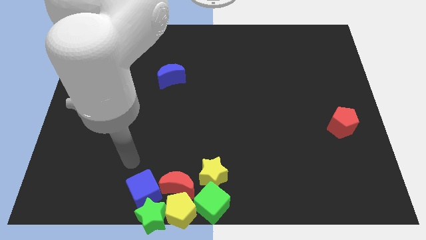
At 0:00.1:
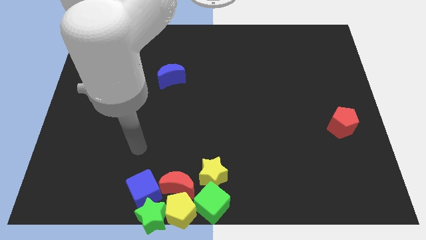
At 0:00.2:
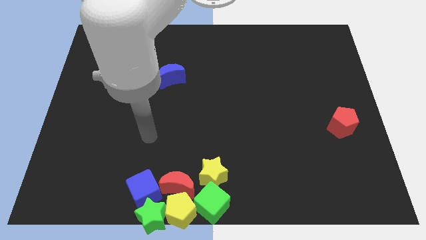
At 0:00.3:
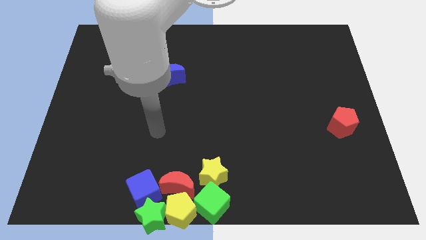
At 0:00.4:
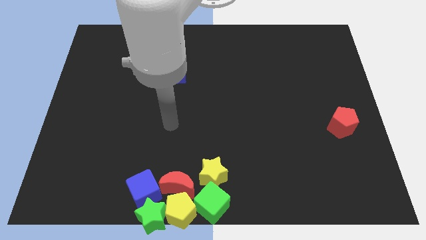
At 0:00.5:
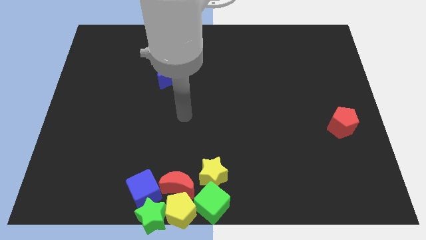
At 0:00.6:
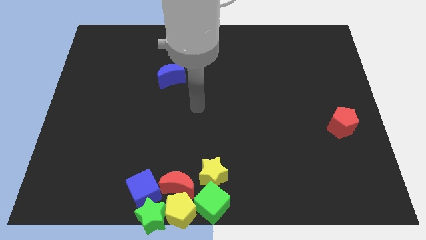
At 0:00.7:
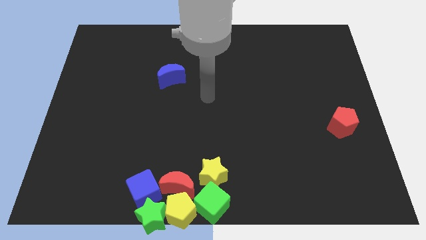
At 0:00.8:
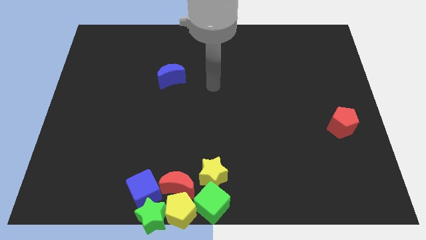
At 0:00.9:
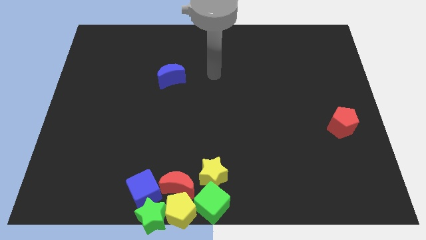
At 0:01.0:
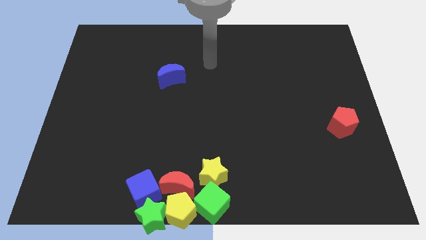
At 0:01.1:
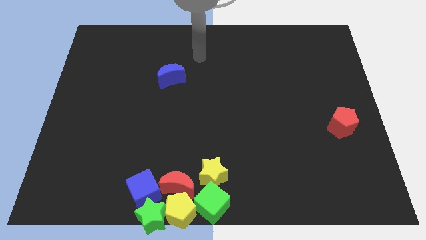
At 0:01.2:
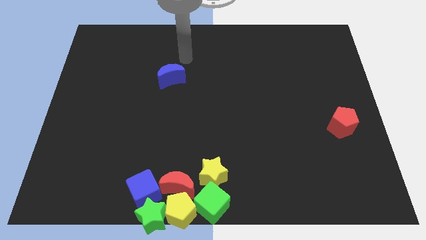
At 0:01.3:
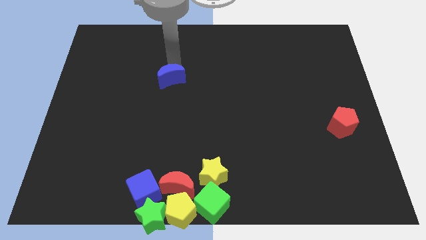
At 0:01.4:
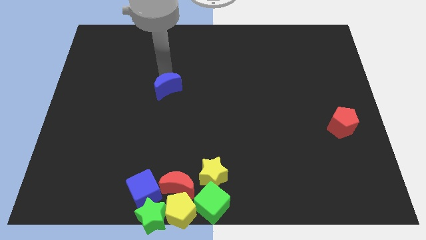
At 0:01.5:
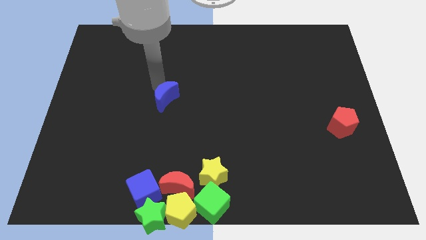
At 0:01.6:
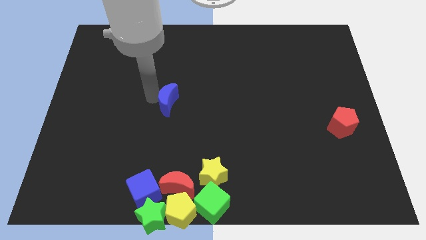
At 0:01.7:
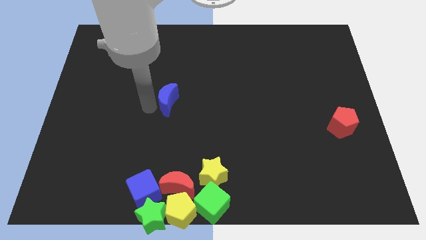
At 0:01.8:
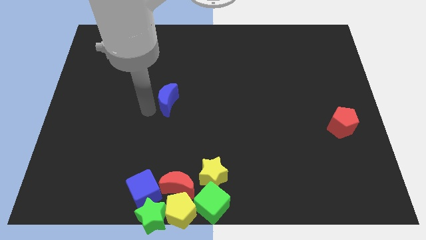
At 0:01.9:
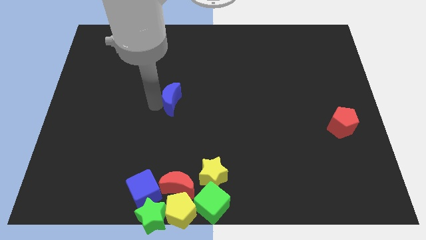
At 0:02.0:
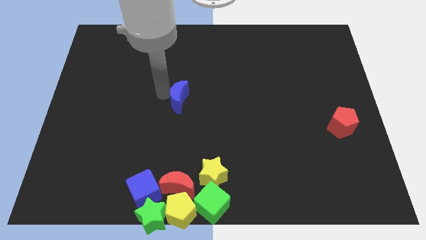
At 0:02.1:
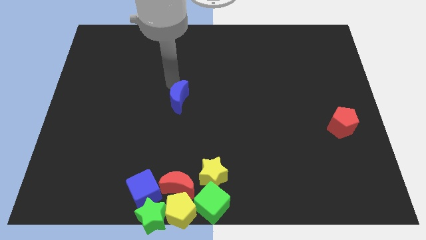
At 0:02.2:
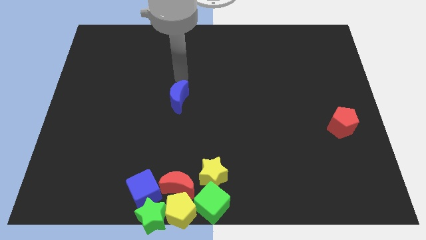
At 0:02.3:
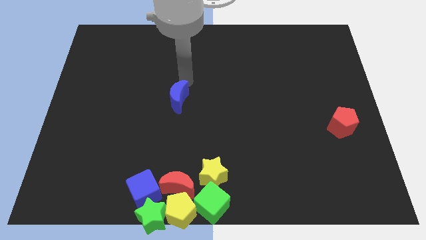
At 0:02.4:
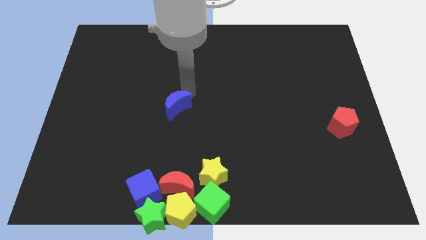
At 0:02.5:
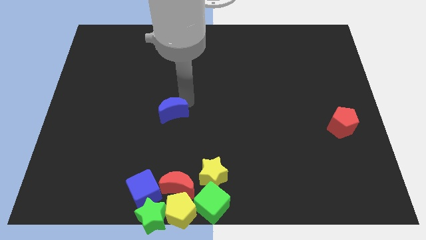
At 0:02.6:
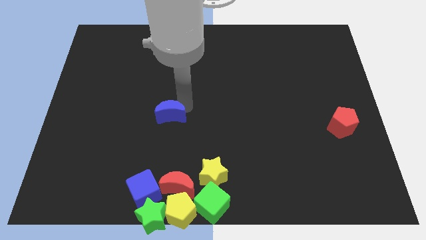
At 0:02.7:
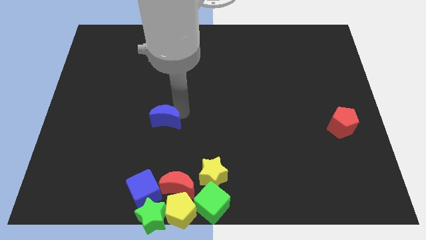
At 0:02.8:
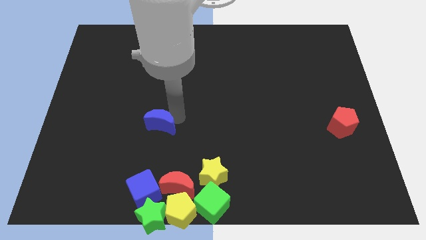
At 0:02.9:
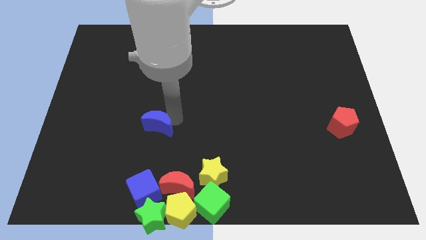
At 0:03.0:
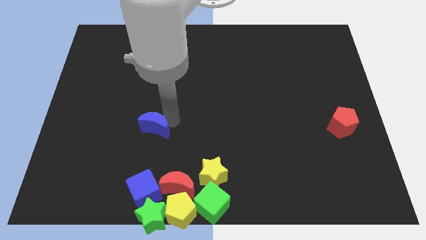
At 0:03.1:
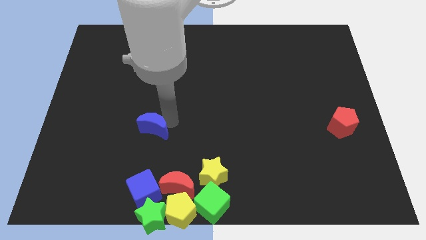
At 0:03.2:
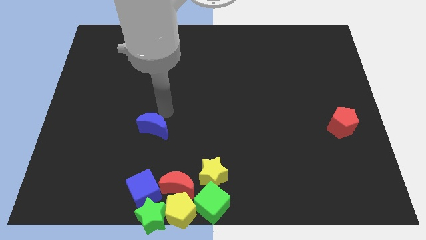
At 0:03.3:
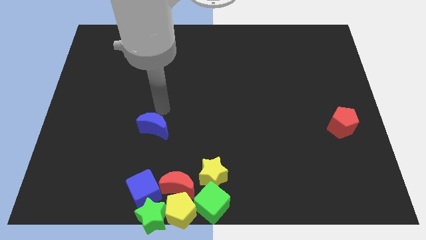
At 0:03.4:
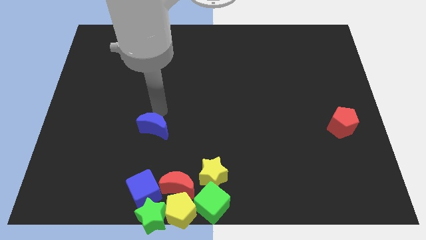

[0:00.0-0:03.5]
place the blue moon vertically above the blue cube

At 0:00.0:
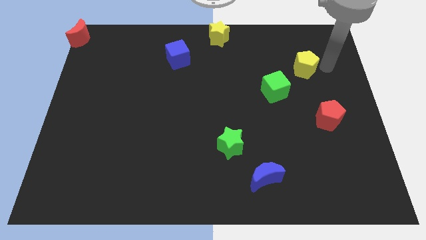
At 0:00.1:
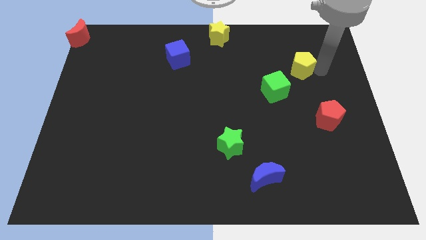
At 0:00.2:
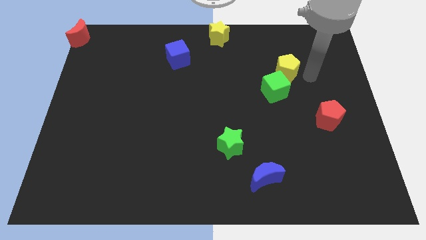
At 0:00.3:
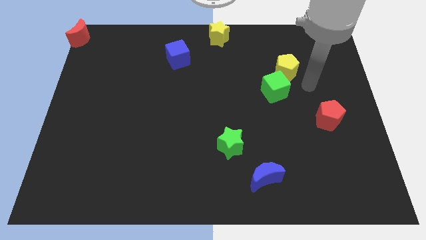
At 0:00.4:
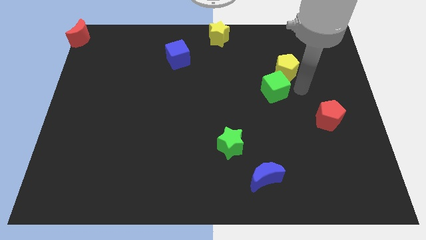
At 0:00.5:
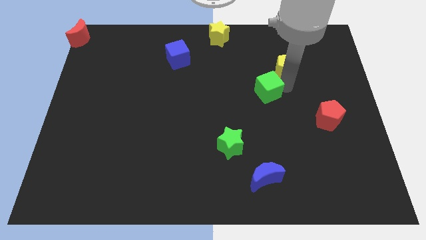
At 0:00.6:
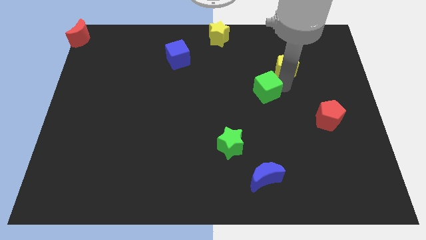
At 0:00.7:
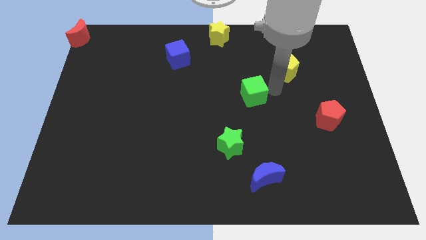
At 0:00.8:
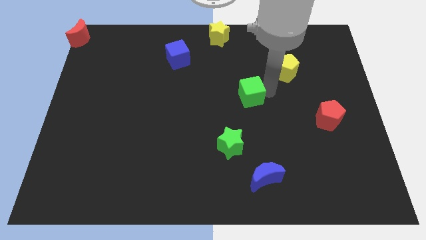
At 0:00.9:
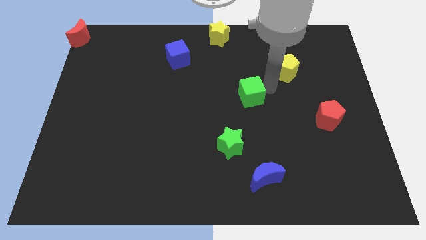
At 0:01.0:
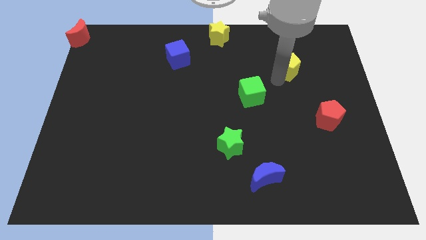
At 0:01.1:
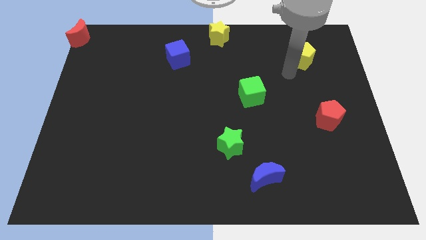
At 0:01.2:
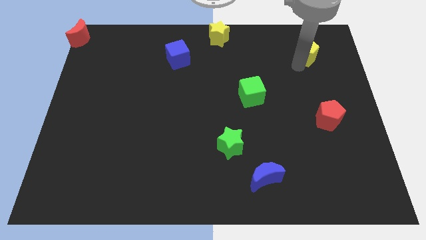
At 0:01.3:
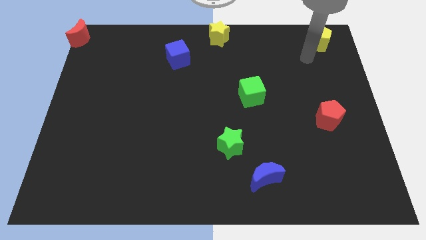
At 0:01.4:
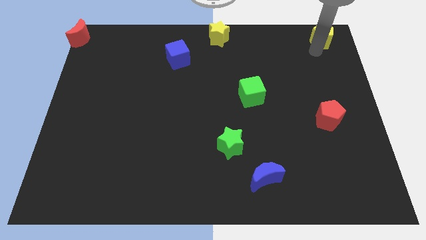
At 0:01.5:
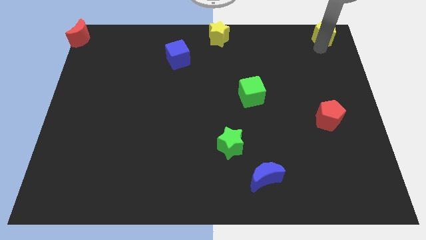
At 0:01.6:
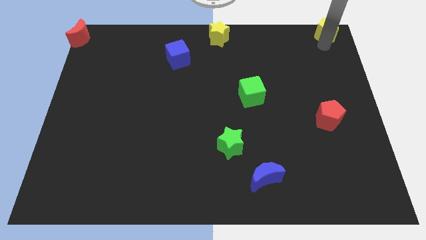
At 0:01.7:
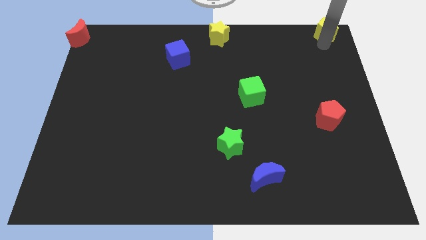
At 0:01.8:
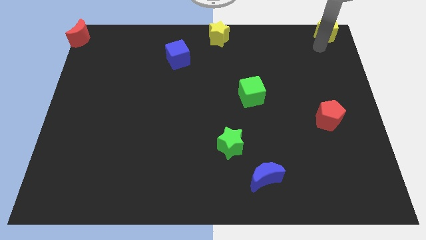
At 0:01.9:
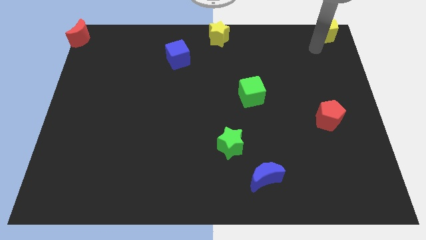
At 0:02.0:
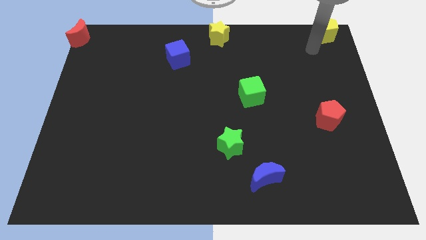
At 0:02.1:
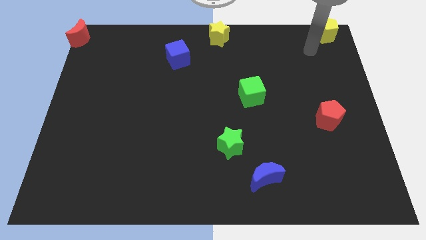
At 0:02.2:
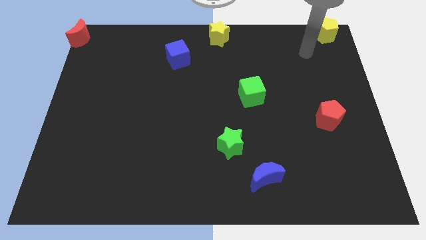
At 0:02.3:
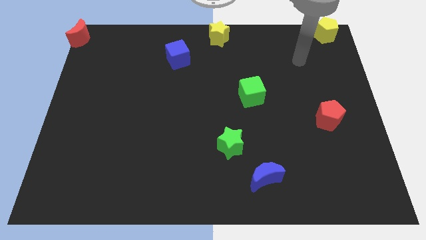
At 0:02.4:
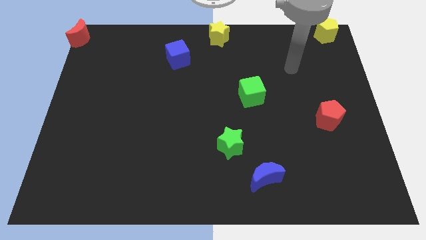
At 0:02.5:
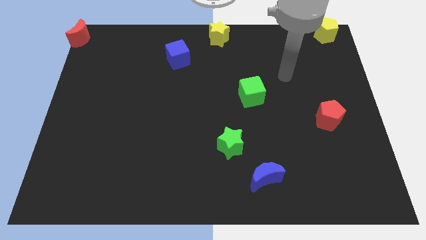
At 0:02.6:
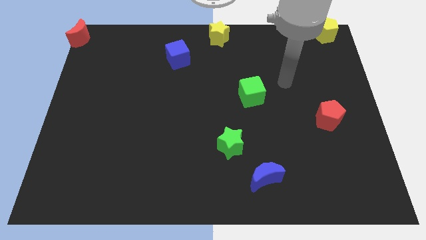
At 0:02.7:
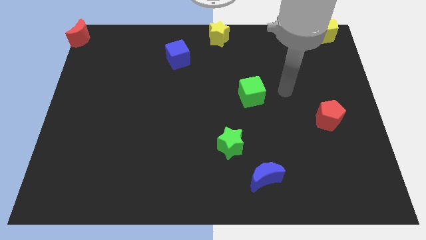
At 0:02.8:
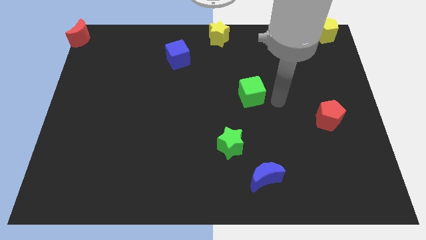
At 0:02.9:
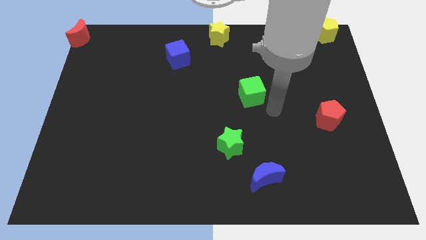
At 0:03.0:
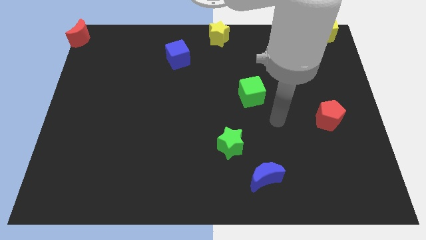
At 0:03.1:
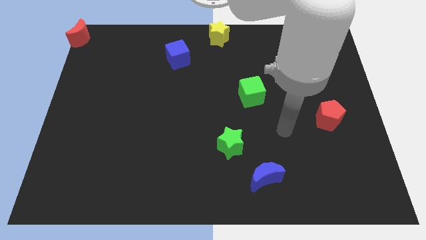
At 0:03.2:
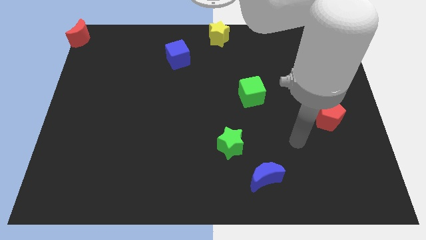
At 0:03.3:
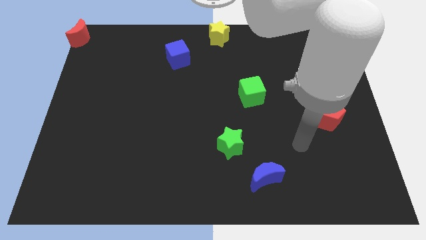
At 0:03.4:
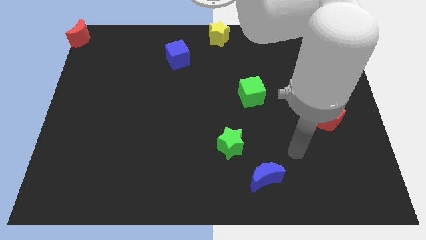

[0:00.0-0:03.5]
move the yellow pentagon to the top right of the board

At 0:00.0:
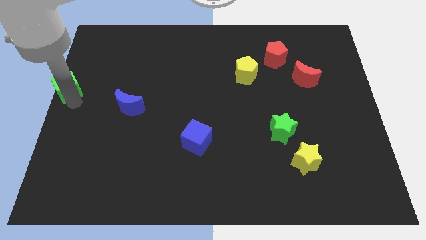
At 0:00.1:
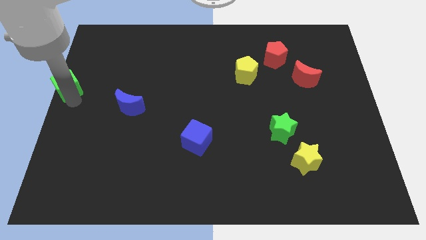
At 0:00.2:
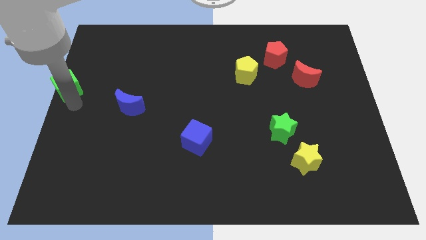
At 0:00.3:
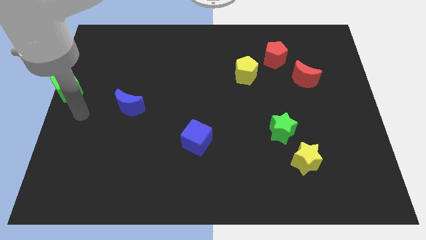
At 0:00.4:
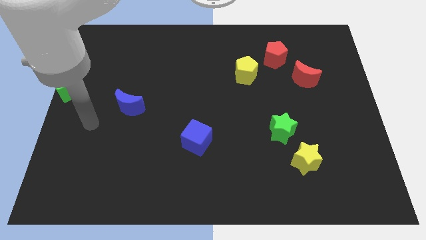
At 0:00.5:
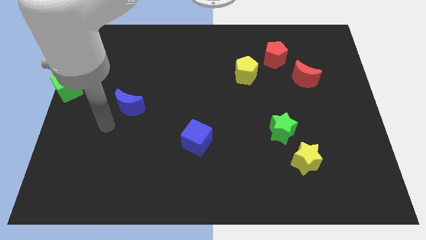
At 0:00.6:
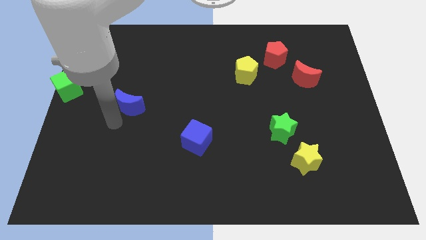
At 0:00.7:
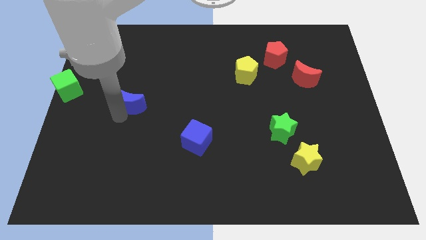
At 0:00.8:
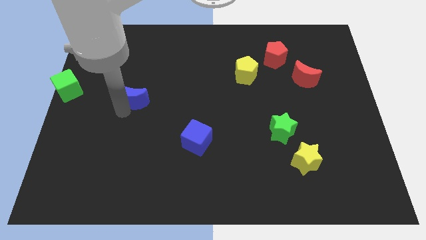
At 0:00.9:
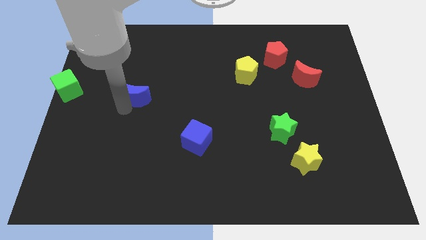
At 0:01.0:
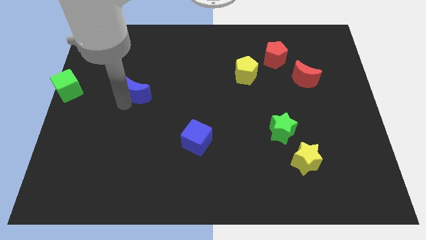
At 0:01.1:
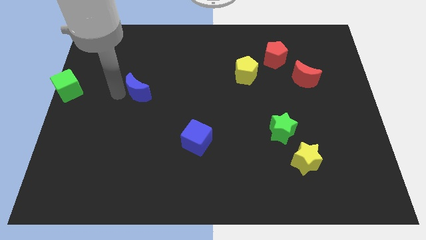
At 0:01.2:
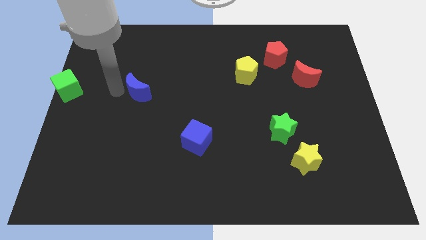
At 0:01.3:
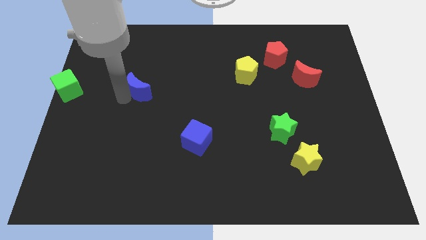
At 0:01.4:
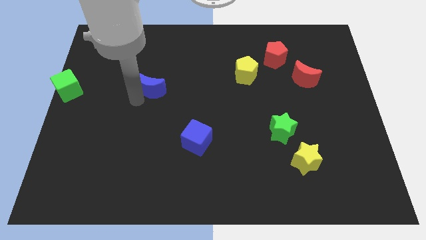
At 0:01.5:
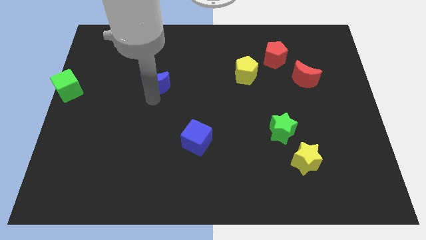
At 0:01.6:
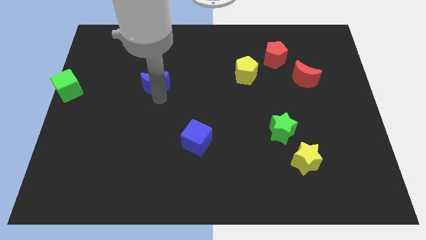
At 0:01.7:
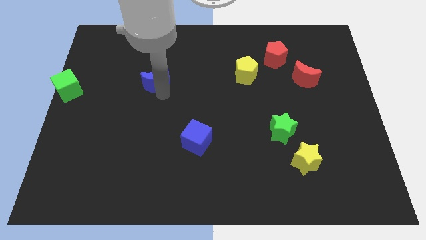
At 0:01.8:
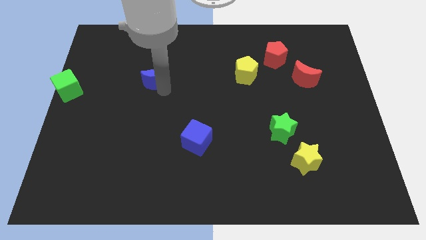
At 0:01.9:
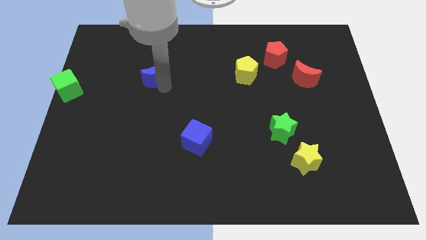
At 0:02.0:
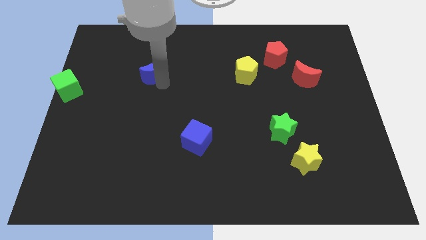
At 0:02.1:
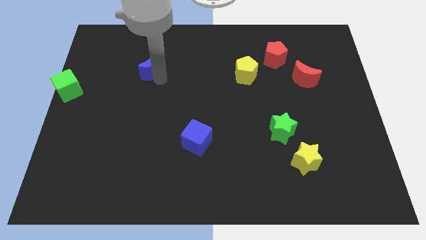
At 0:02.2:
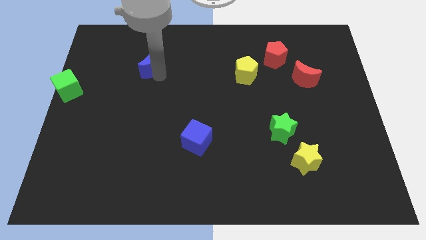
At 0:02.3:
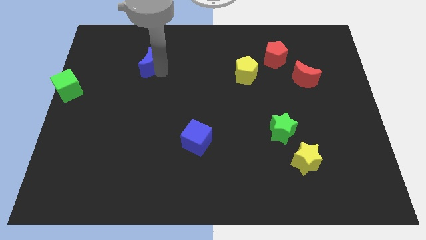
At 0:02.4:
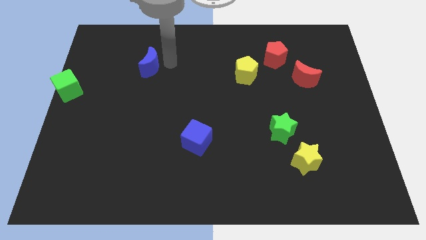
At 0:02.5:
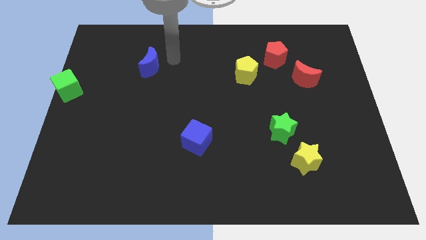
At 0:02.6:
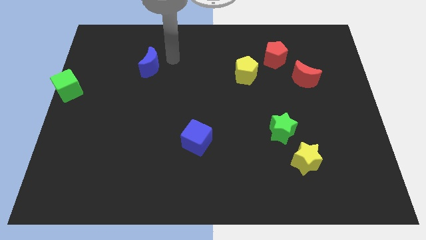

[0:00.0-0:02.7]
move the blue moon slightly towards the top left side of the board
